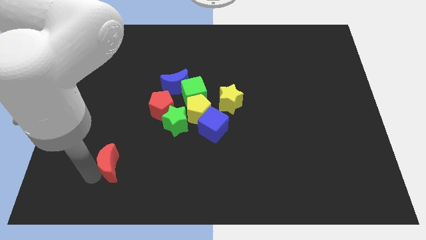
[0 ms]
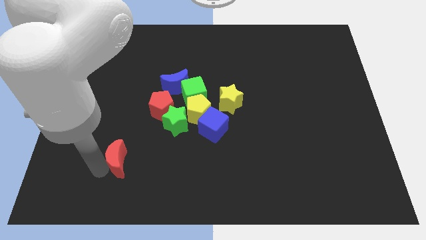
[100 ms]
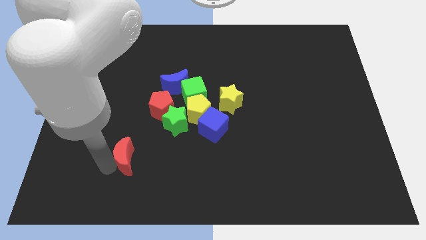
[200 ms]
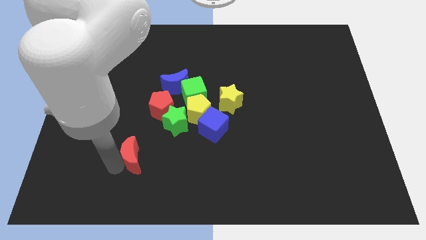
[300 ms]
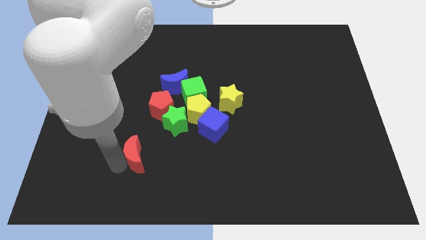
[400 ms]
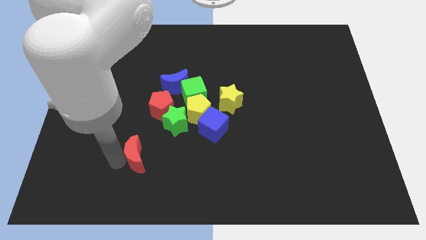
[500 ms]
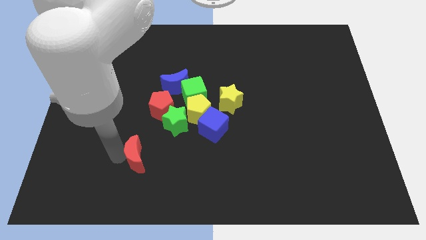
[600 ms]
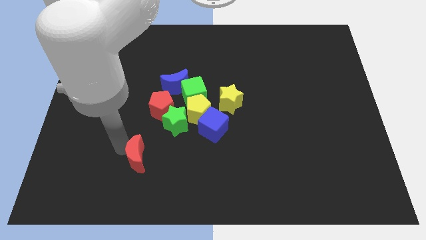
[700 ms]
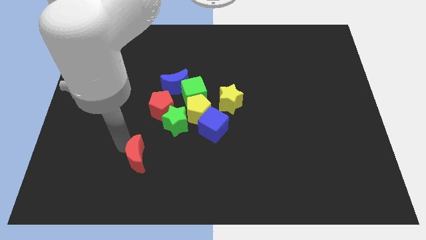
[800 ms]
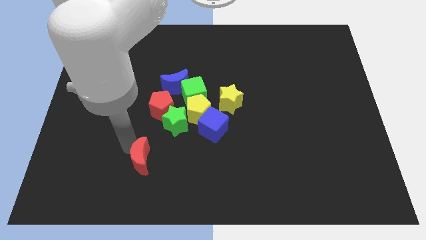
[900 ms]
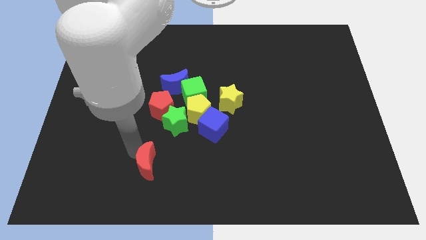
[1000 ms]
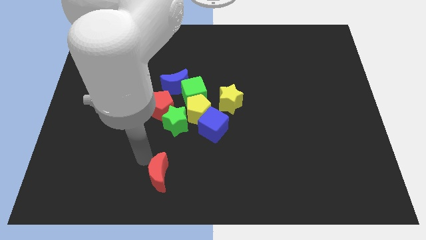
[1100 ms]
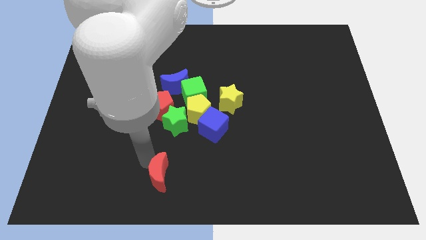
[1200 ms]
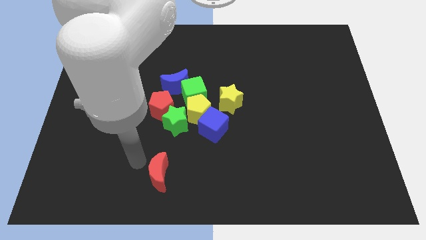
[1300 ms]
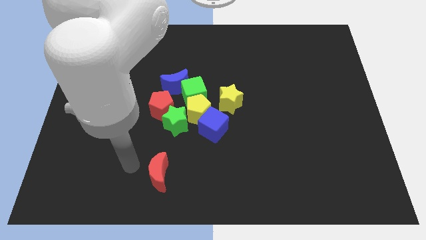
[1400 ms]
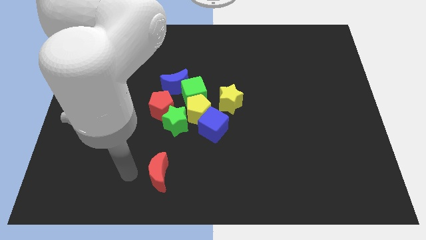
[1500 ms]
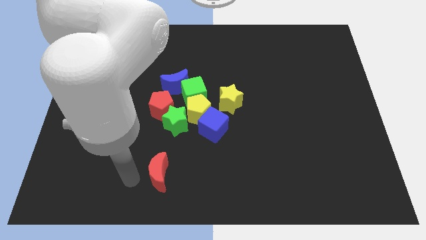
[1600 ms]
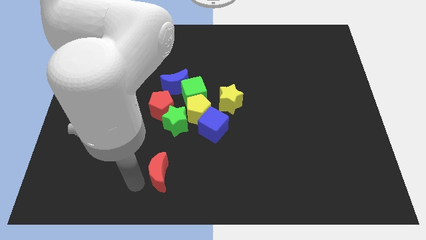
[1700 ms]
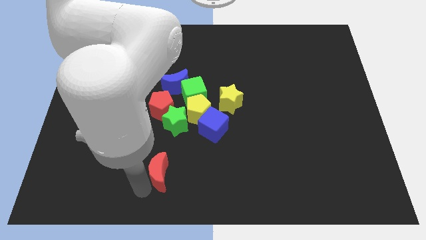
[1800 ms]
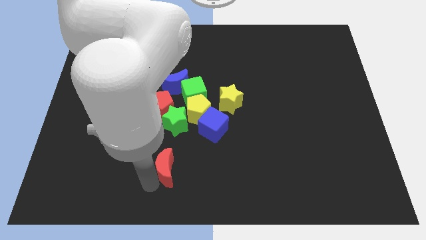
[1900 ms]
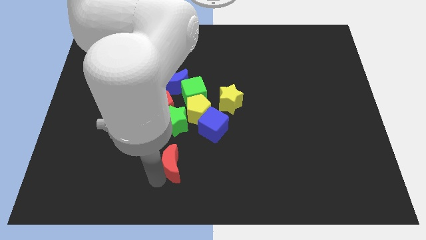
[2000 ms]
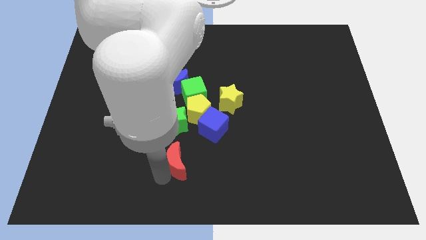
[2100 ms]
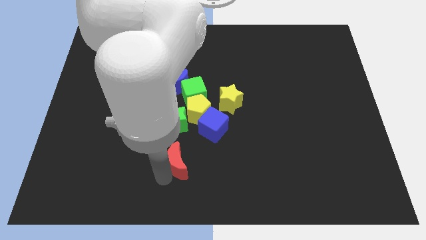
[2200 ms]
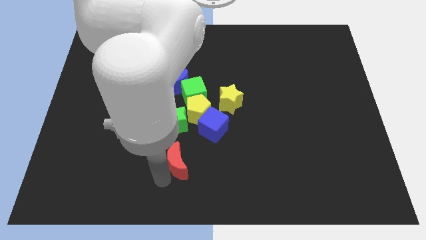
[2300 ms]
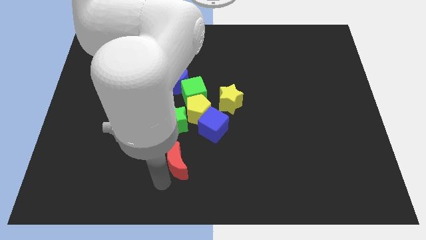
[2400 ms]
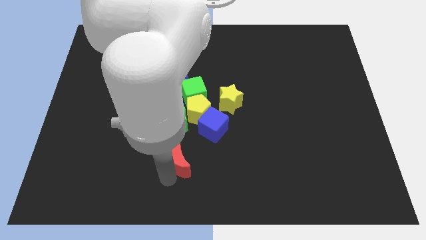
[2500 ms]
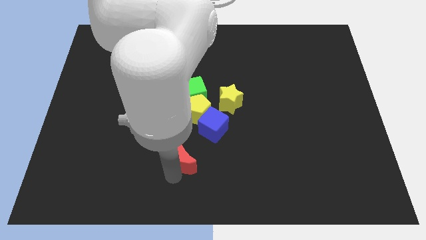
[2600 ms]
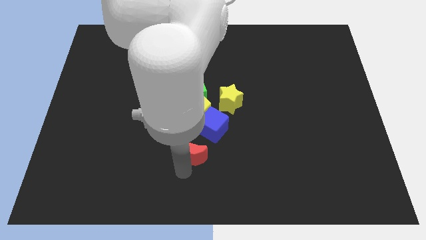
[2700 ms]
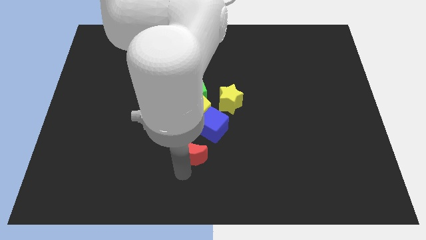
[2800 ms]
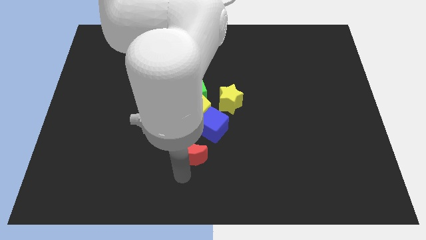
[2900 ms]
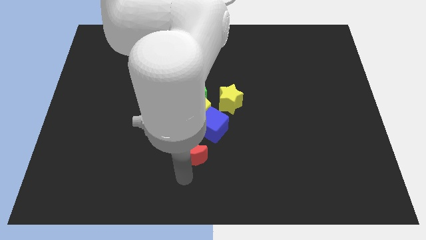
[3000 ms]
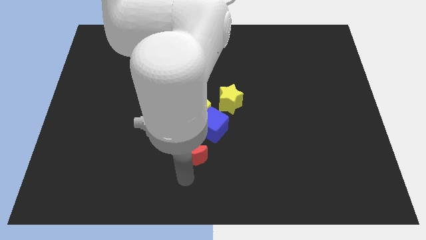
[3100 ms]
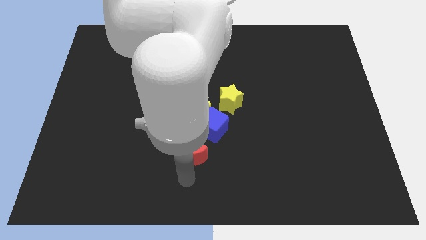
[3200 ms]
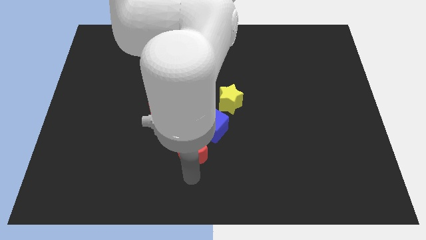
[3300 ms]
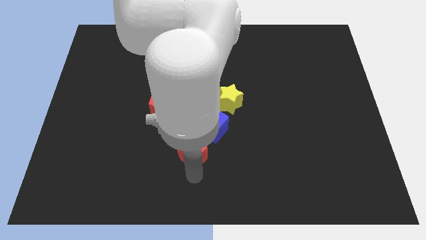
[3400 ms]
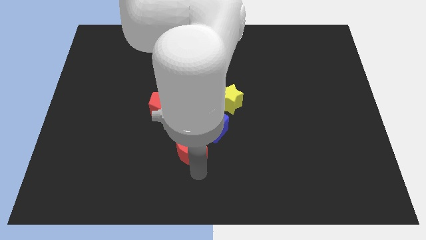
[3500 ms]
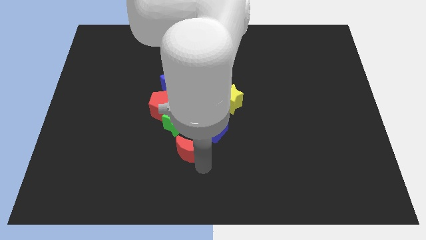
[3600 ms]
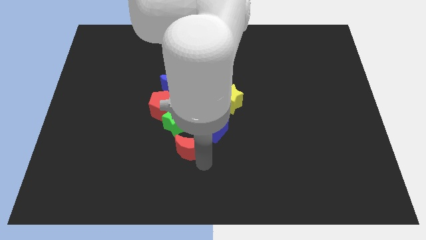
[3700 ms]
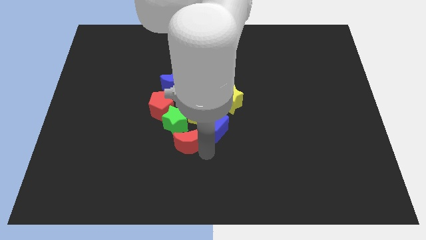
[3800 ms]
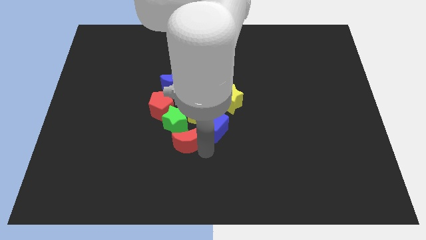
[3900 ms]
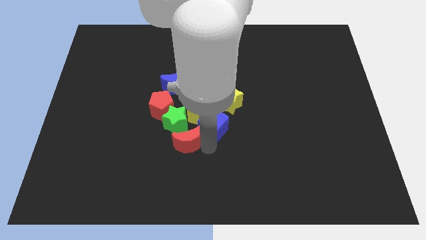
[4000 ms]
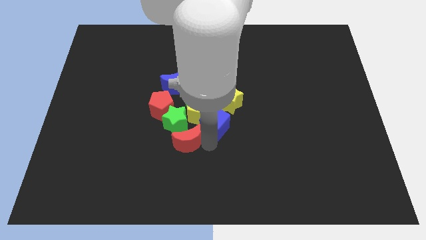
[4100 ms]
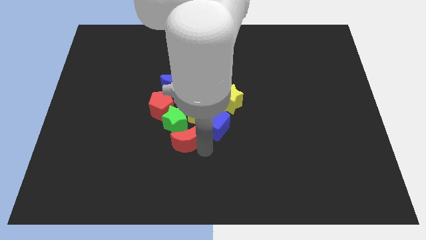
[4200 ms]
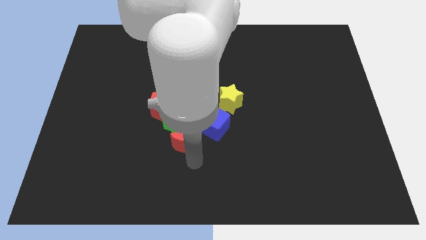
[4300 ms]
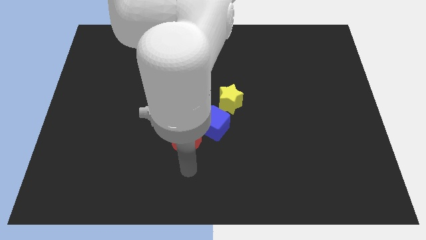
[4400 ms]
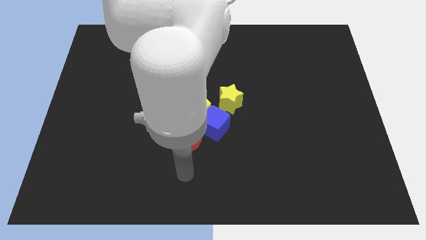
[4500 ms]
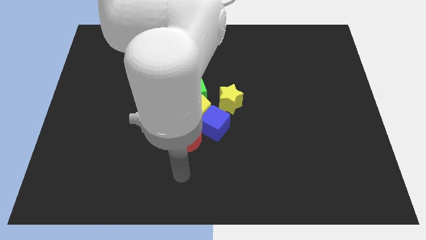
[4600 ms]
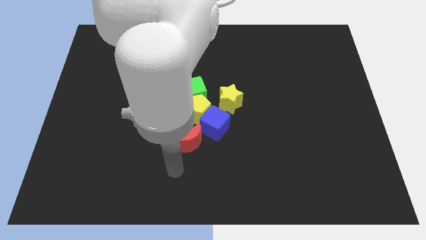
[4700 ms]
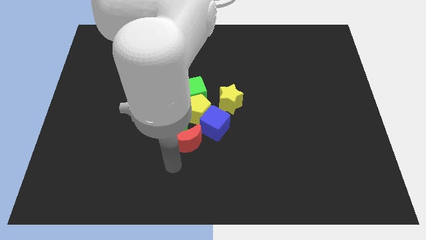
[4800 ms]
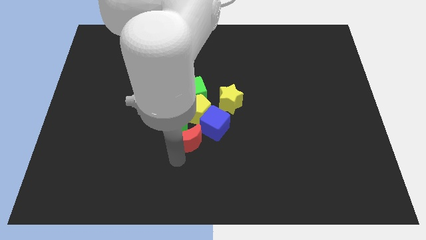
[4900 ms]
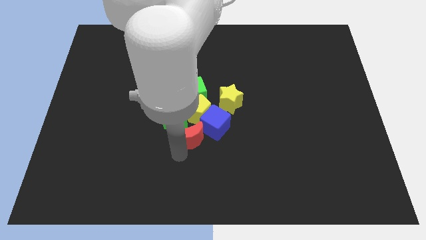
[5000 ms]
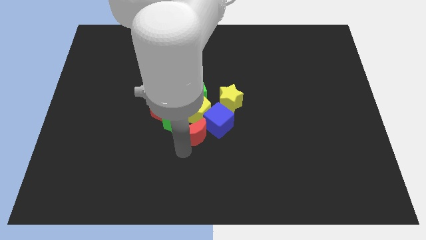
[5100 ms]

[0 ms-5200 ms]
push the red moon into the group of objects

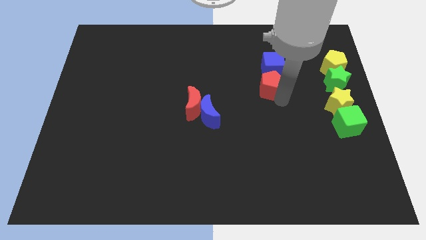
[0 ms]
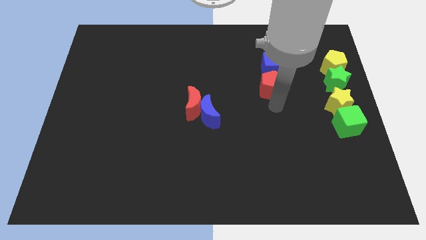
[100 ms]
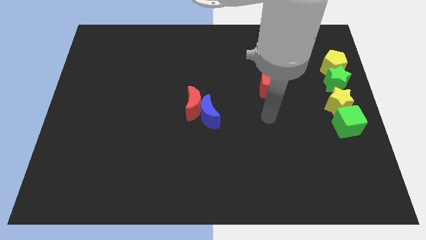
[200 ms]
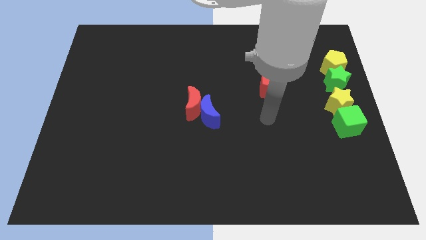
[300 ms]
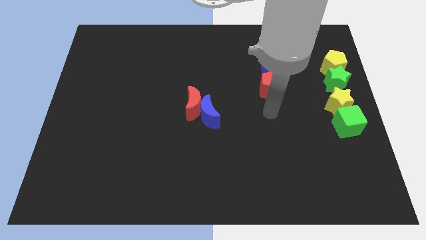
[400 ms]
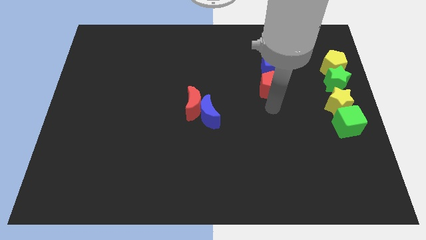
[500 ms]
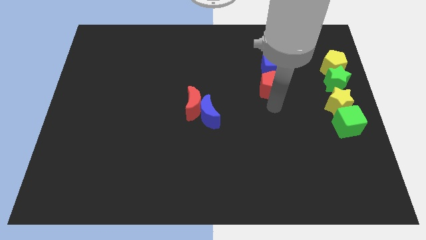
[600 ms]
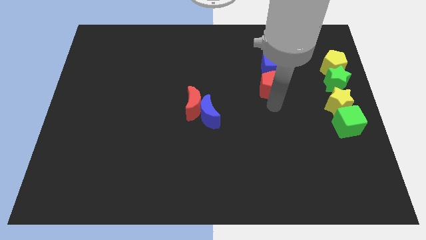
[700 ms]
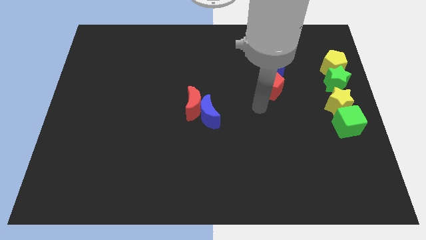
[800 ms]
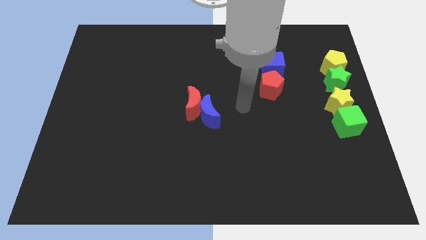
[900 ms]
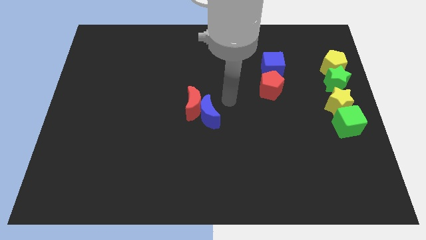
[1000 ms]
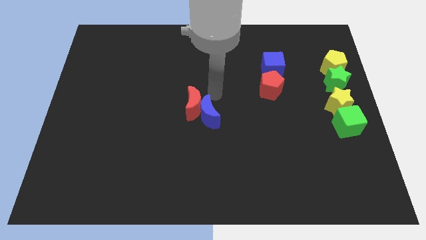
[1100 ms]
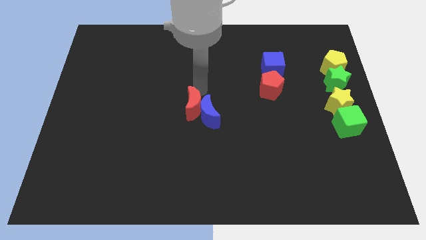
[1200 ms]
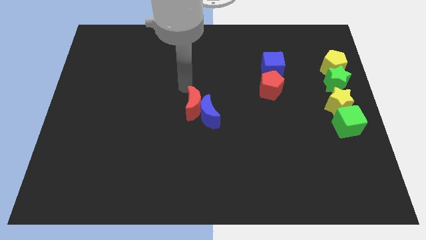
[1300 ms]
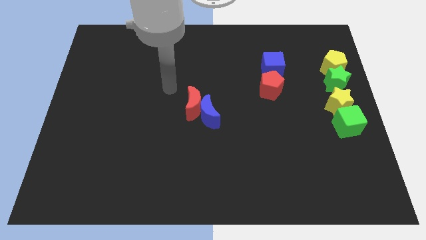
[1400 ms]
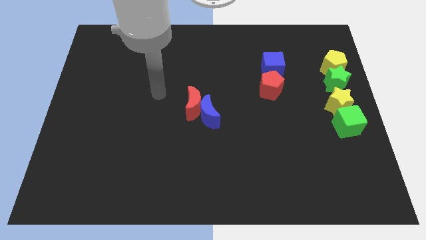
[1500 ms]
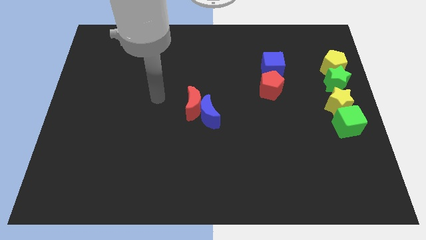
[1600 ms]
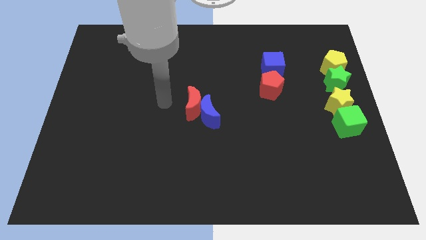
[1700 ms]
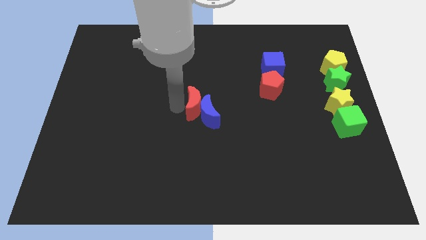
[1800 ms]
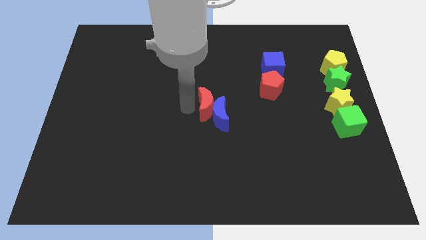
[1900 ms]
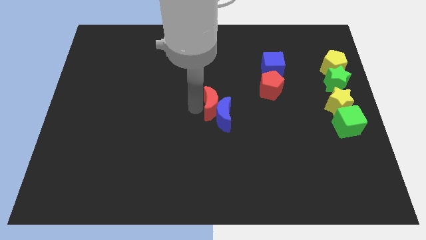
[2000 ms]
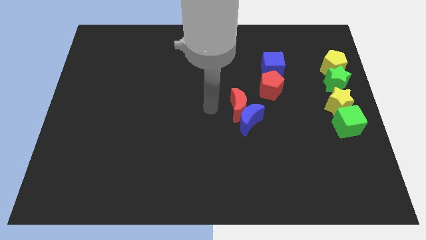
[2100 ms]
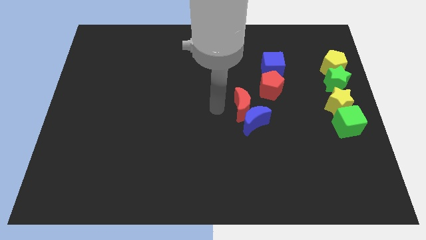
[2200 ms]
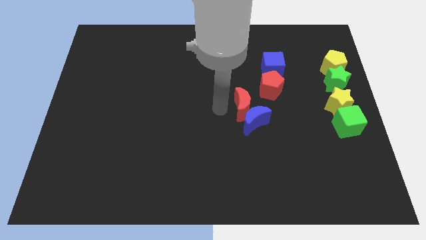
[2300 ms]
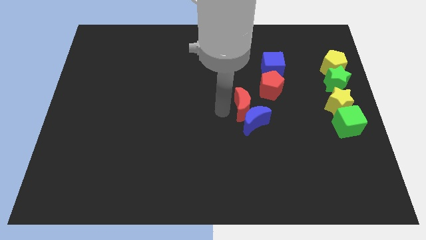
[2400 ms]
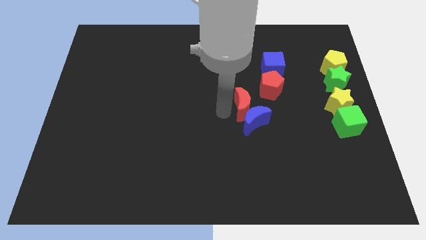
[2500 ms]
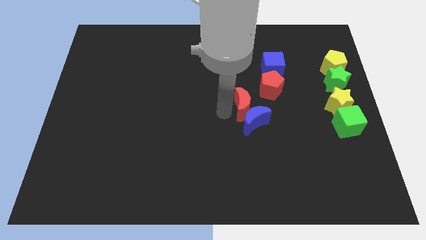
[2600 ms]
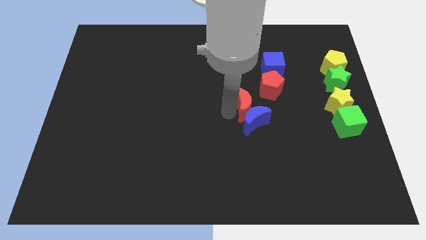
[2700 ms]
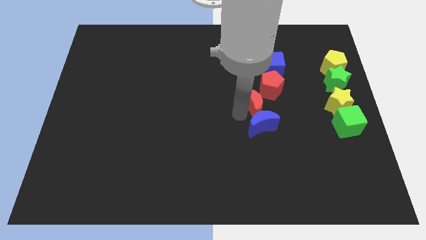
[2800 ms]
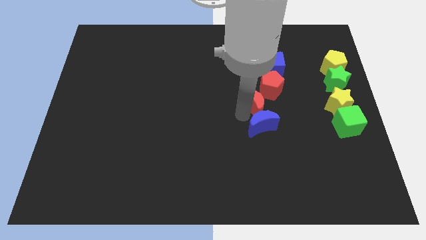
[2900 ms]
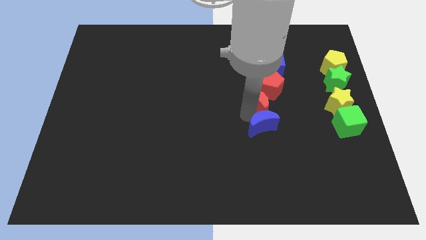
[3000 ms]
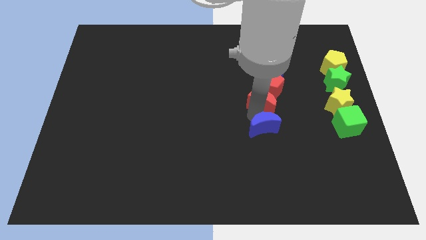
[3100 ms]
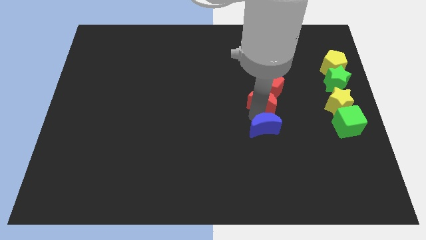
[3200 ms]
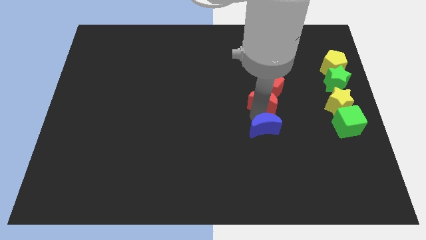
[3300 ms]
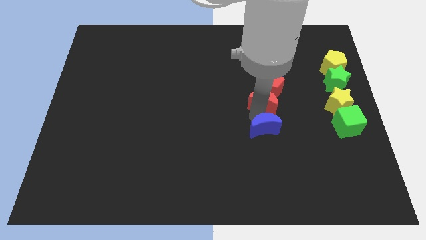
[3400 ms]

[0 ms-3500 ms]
push the red crescet and blue crescent towards the bottom side of the red pentagon

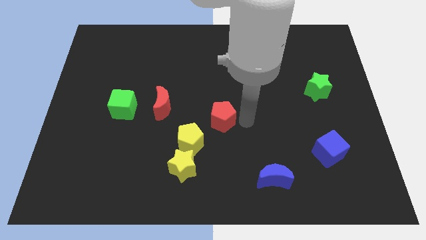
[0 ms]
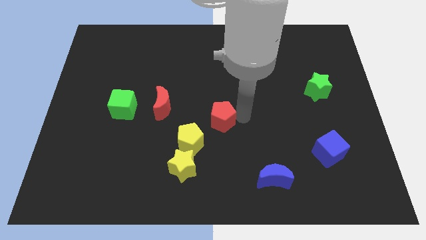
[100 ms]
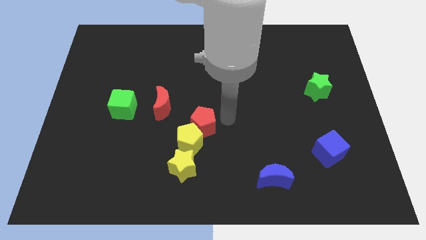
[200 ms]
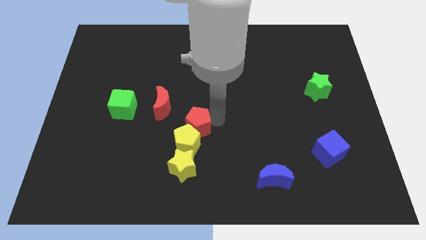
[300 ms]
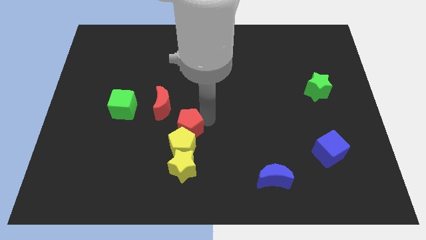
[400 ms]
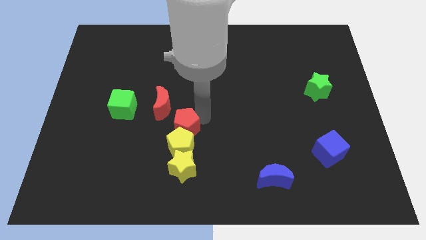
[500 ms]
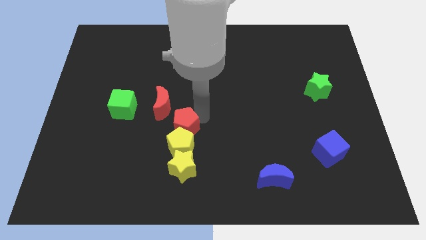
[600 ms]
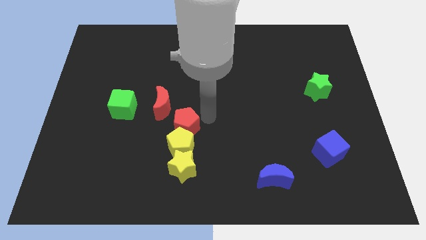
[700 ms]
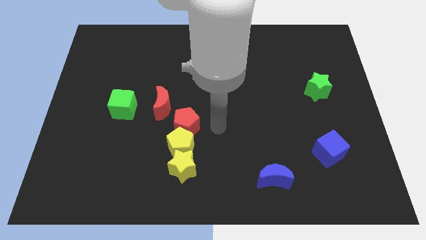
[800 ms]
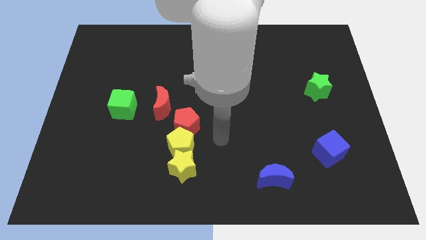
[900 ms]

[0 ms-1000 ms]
push the red pentagon on to the top of the yellow pentagon
